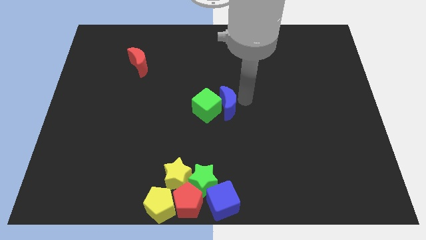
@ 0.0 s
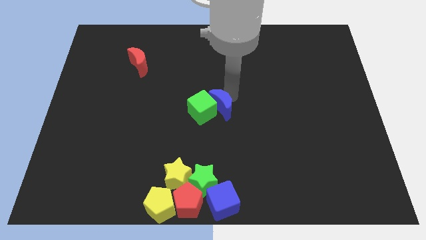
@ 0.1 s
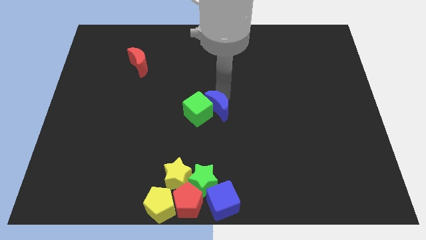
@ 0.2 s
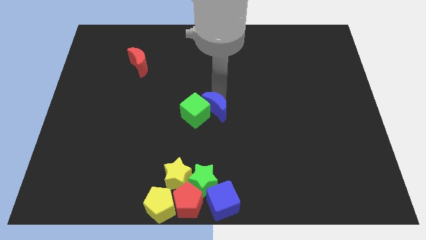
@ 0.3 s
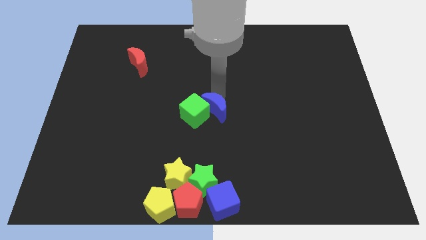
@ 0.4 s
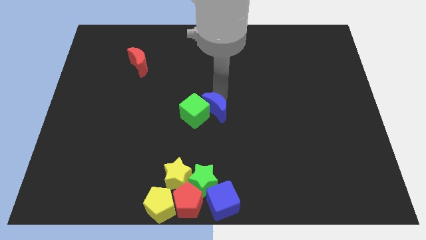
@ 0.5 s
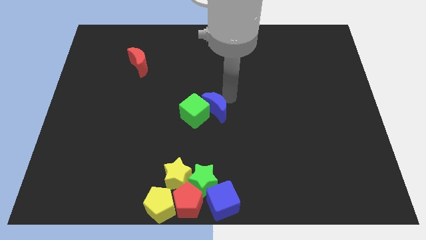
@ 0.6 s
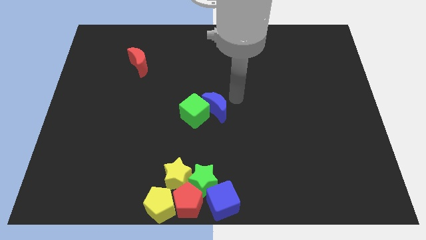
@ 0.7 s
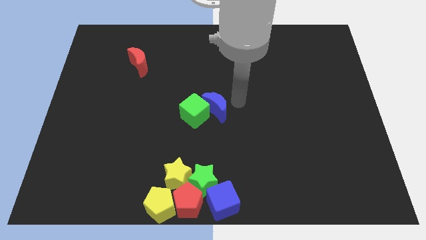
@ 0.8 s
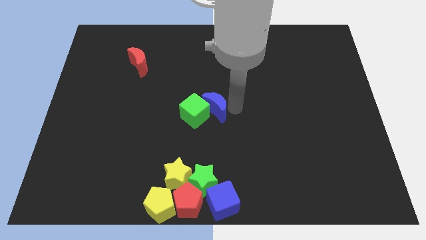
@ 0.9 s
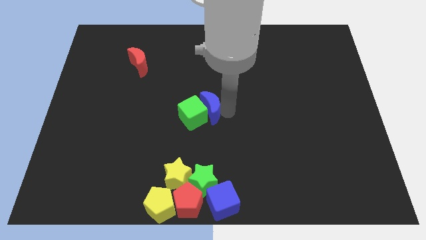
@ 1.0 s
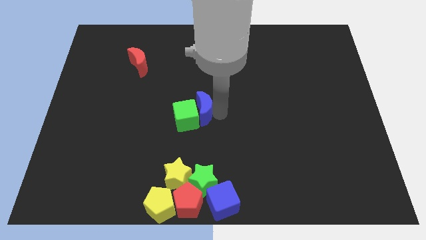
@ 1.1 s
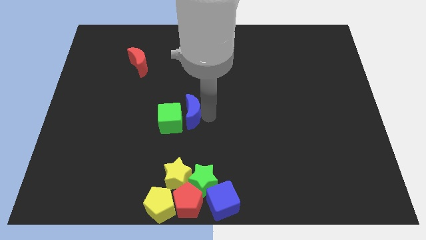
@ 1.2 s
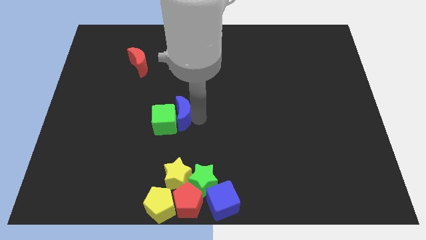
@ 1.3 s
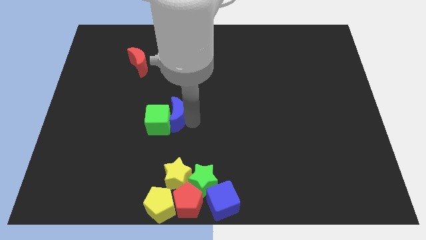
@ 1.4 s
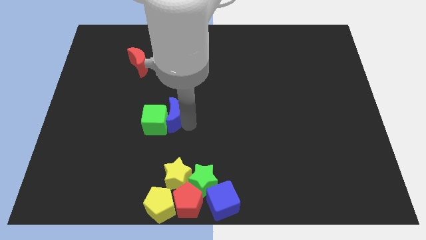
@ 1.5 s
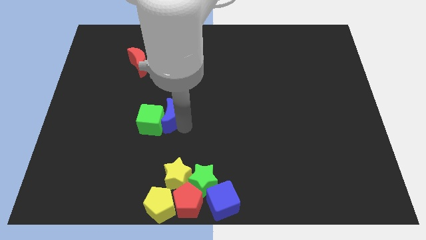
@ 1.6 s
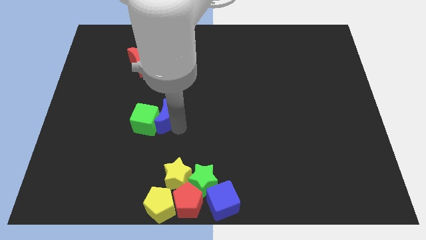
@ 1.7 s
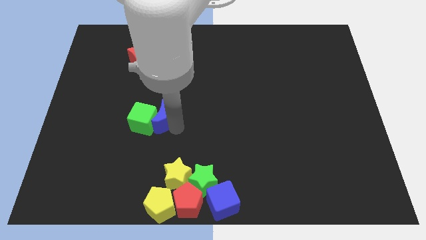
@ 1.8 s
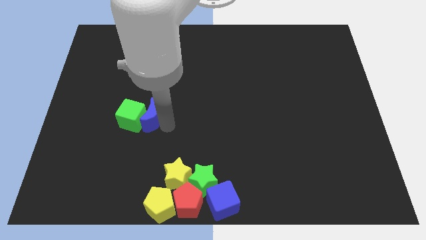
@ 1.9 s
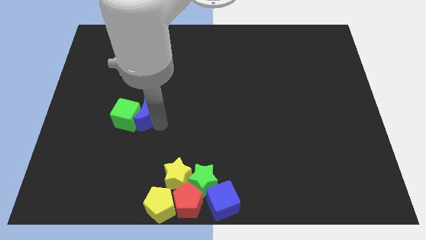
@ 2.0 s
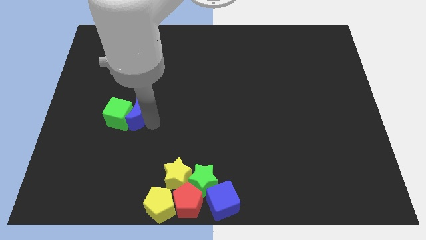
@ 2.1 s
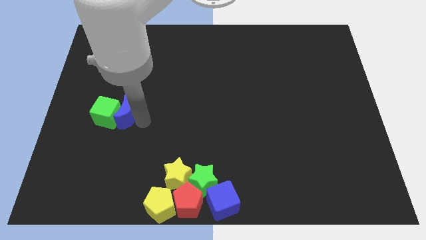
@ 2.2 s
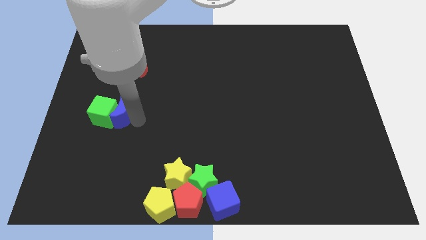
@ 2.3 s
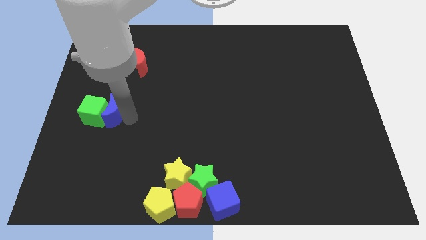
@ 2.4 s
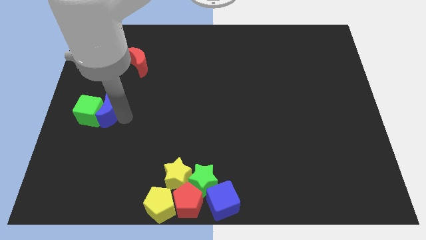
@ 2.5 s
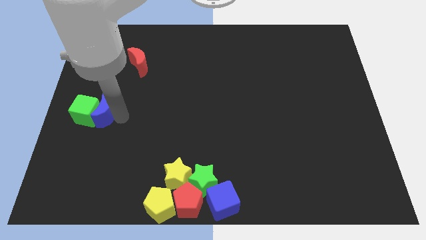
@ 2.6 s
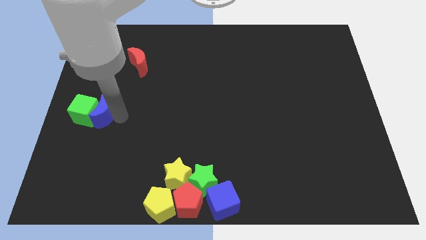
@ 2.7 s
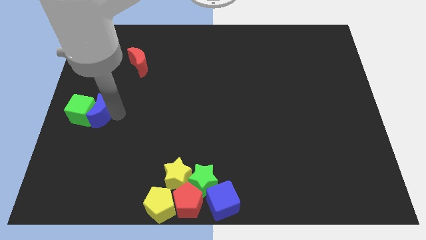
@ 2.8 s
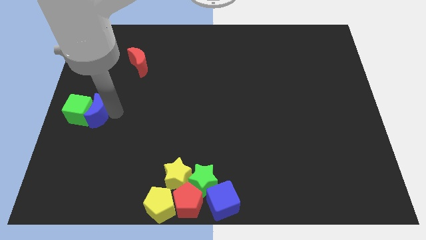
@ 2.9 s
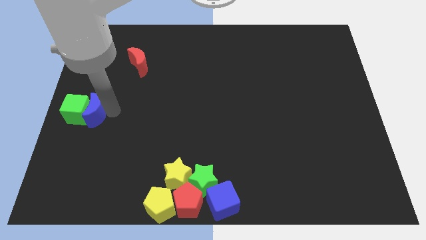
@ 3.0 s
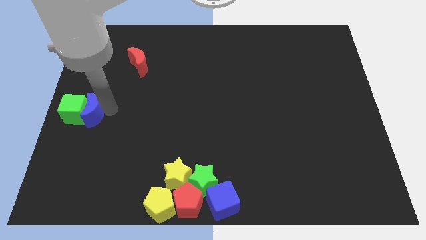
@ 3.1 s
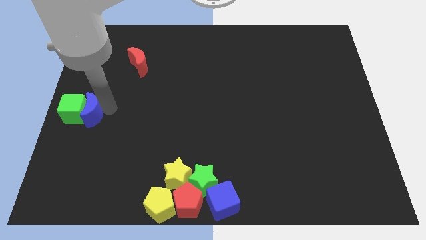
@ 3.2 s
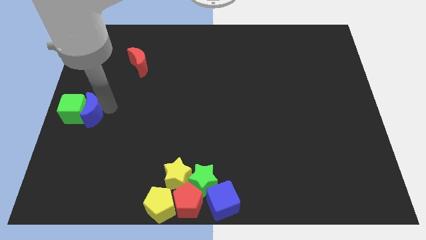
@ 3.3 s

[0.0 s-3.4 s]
place the green cube and blue crescent together at left center of the board

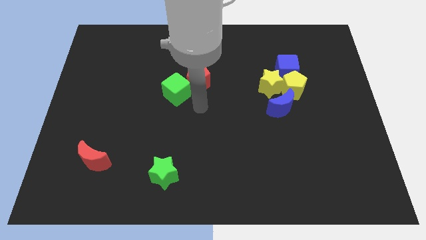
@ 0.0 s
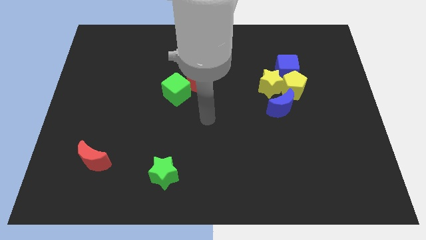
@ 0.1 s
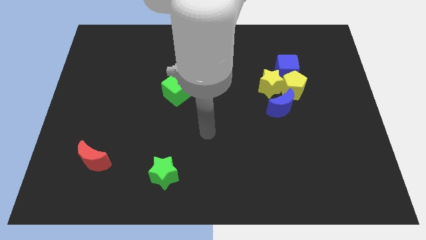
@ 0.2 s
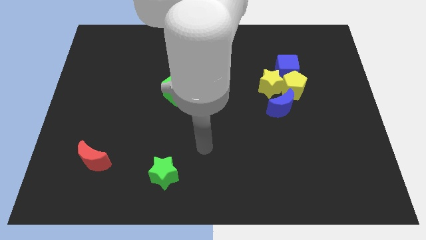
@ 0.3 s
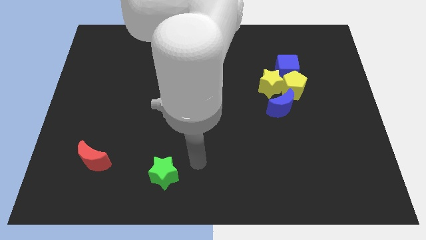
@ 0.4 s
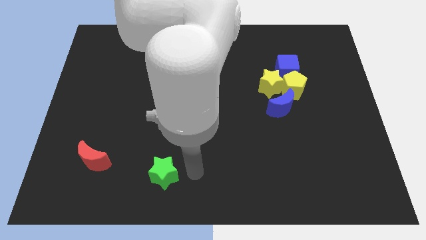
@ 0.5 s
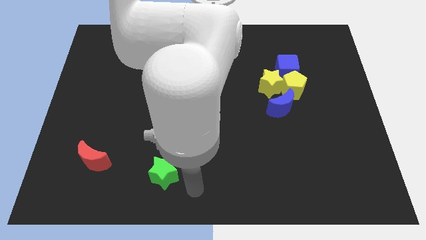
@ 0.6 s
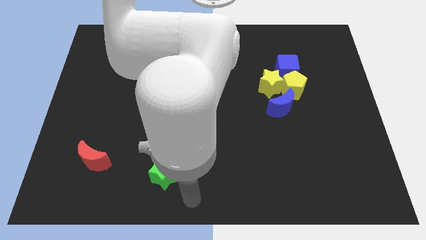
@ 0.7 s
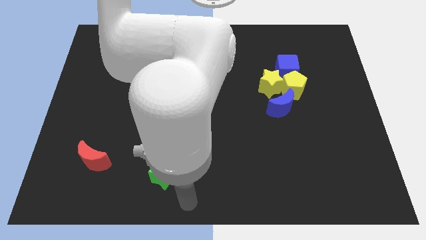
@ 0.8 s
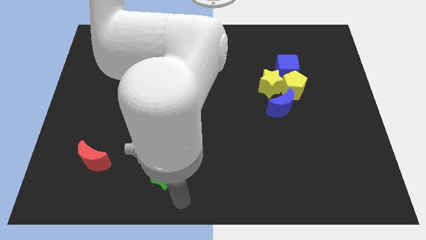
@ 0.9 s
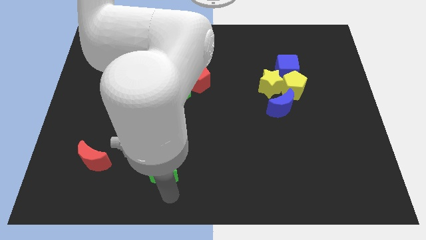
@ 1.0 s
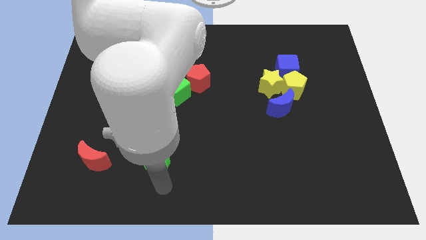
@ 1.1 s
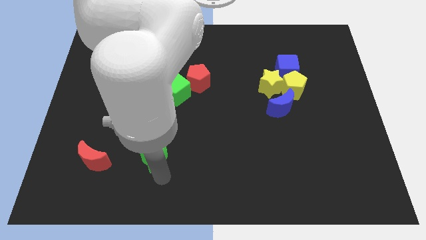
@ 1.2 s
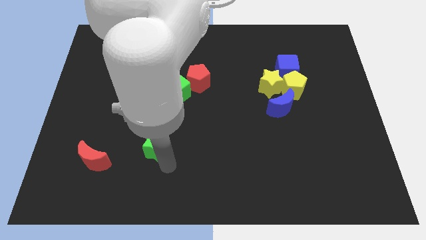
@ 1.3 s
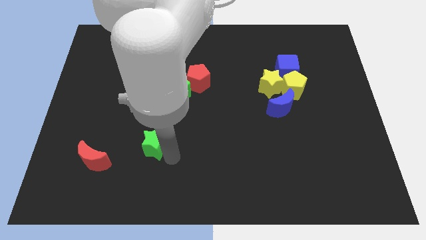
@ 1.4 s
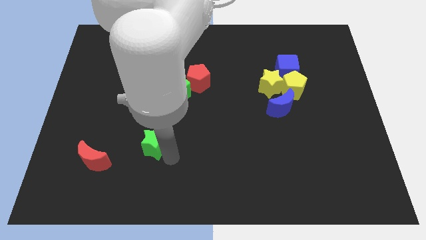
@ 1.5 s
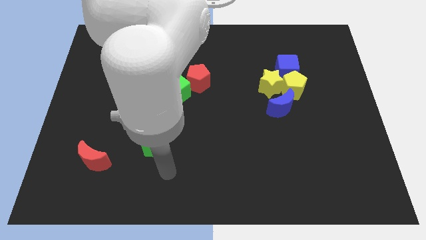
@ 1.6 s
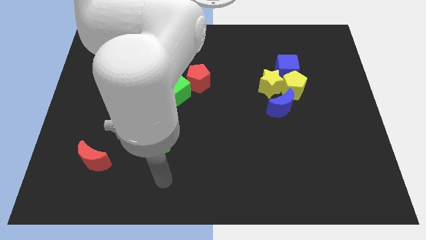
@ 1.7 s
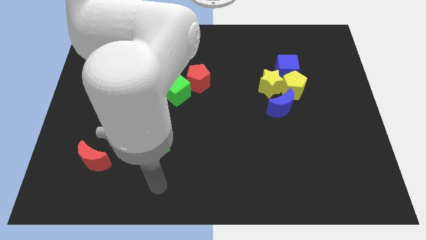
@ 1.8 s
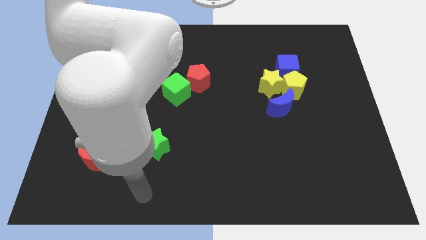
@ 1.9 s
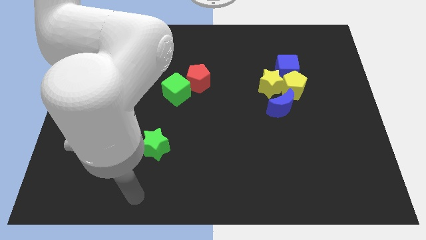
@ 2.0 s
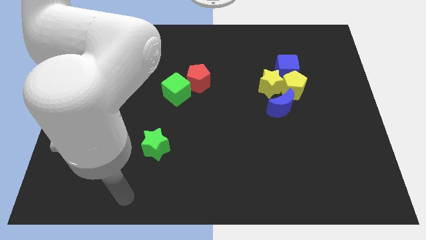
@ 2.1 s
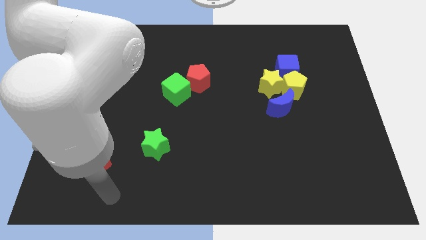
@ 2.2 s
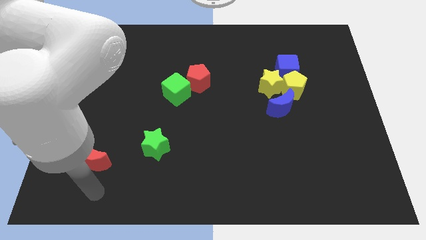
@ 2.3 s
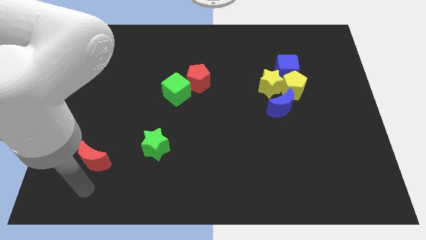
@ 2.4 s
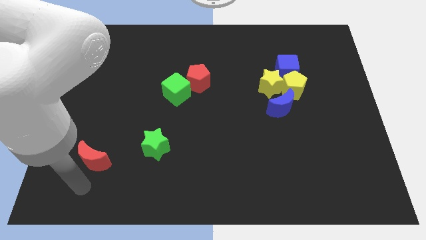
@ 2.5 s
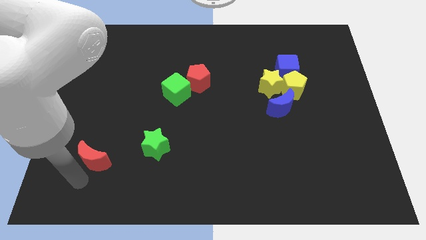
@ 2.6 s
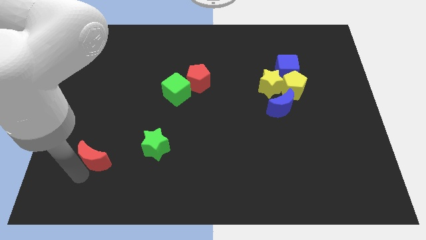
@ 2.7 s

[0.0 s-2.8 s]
push the green star upward

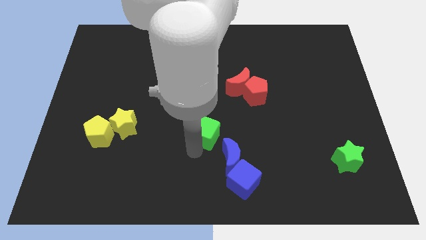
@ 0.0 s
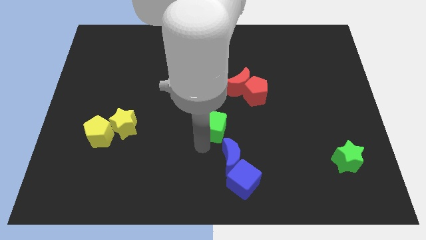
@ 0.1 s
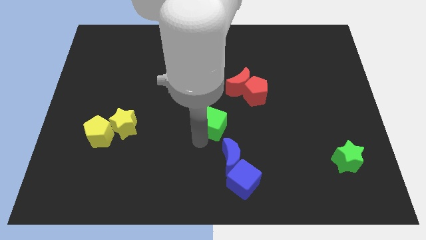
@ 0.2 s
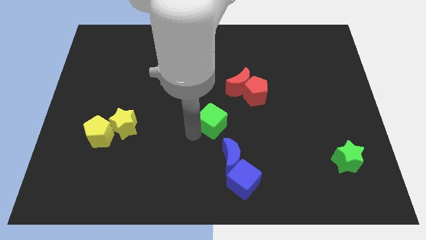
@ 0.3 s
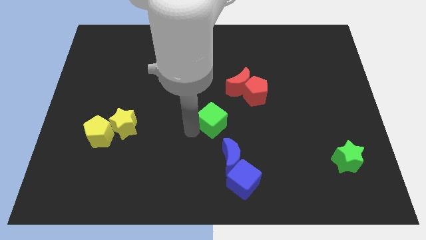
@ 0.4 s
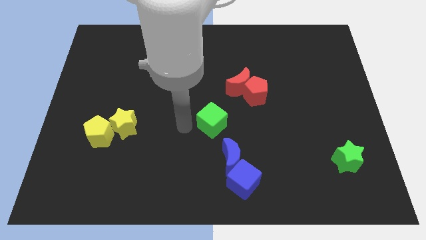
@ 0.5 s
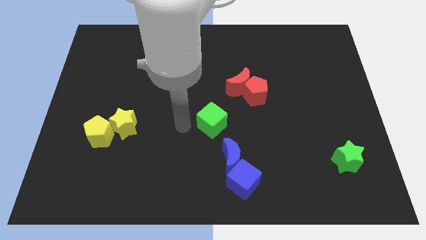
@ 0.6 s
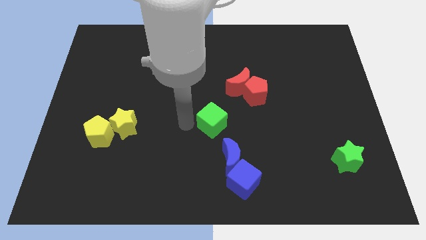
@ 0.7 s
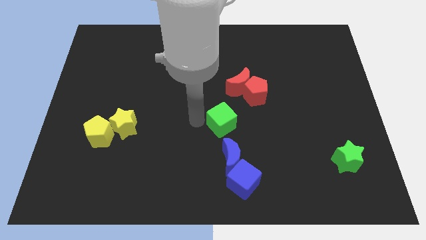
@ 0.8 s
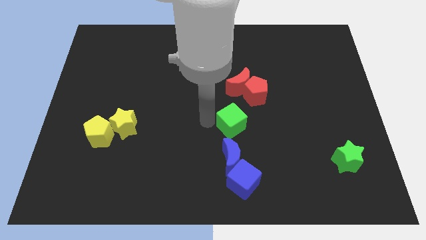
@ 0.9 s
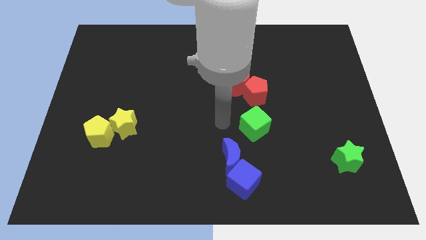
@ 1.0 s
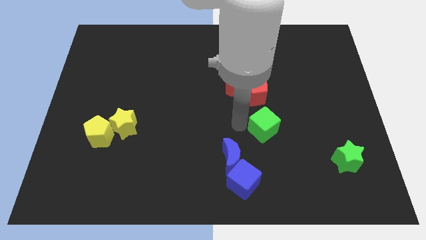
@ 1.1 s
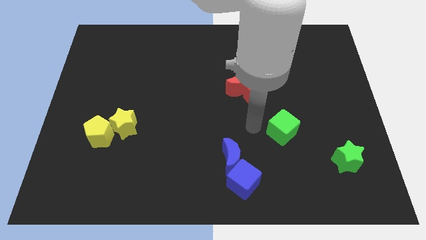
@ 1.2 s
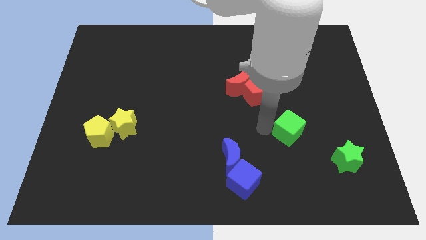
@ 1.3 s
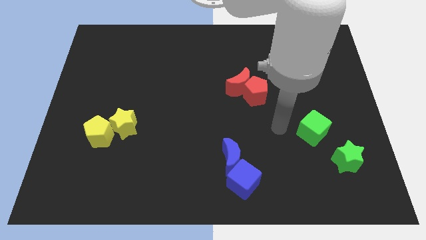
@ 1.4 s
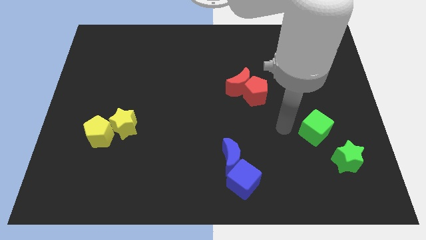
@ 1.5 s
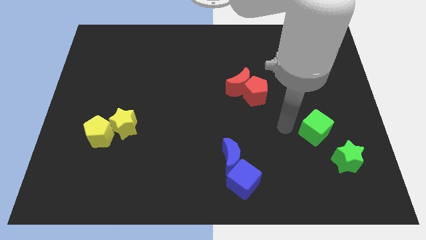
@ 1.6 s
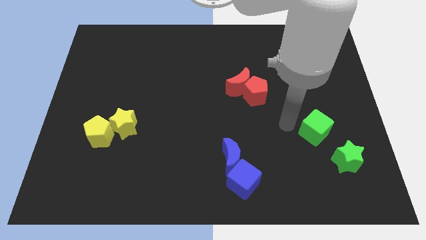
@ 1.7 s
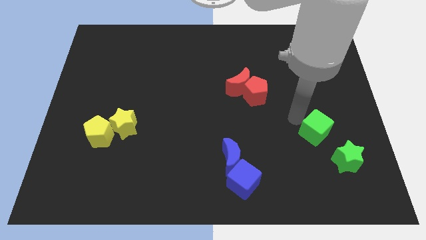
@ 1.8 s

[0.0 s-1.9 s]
place the green cube diagonal above the green star

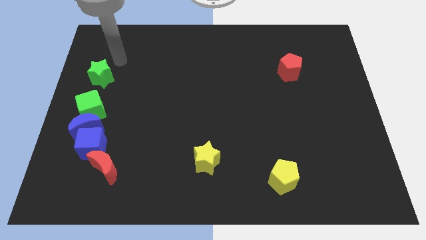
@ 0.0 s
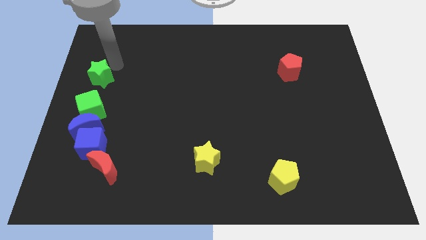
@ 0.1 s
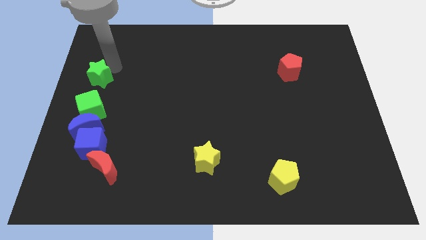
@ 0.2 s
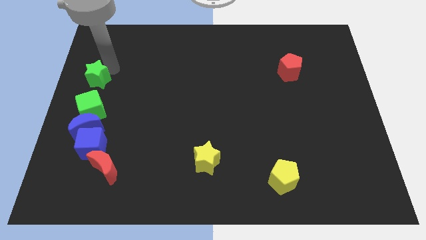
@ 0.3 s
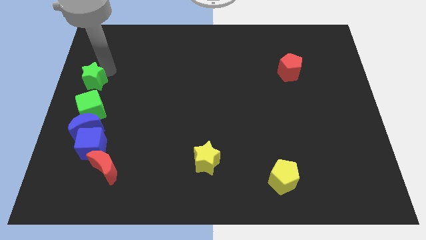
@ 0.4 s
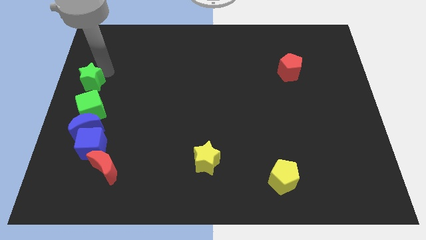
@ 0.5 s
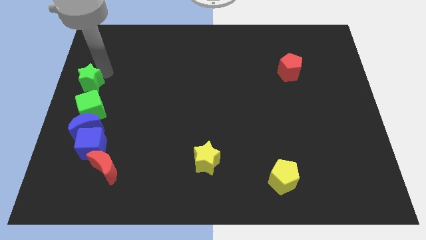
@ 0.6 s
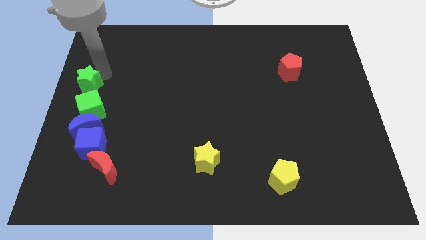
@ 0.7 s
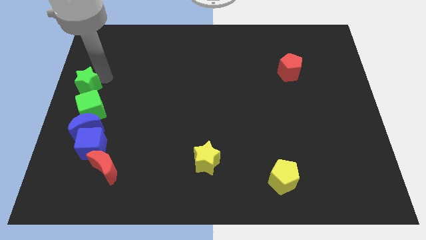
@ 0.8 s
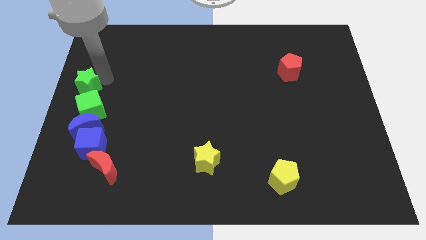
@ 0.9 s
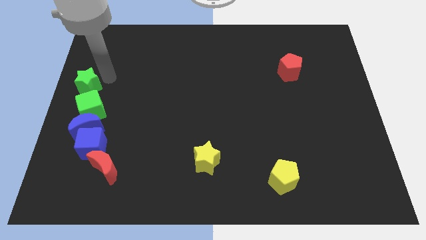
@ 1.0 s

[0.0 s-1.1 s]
place the green star above the green cube
